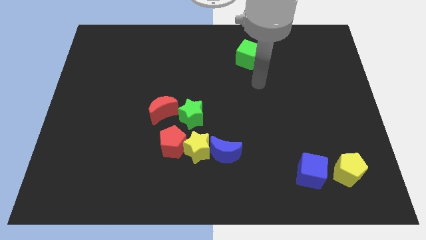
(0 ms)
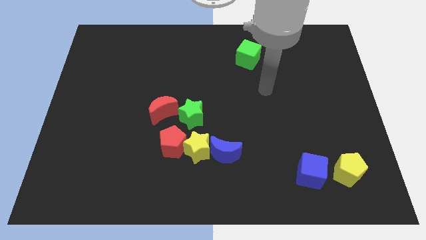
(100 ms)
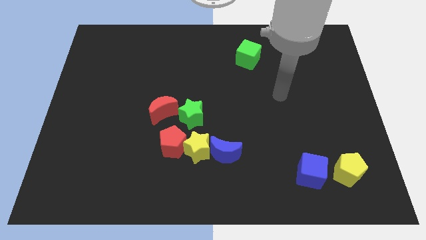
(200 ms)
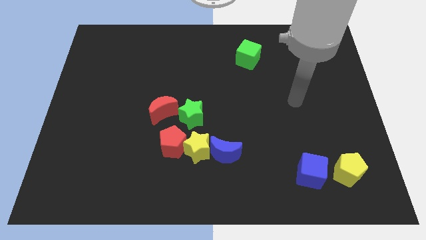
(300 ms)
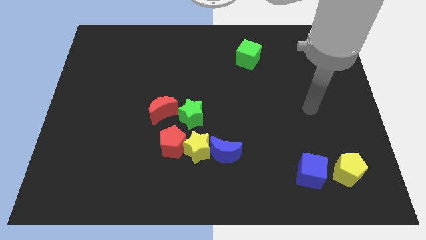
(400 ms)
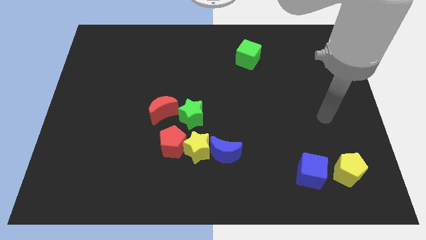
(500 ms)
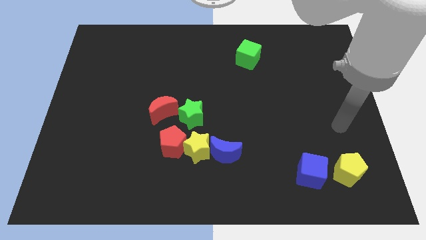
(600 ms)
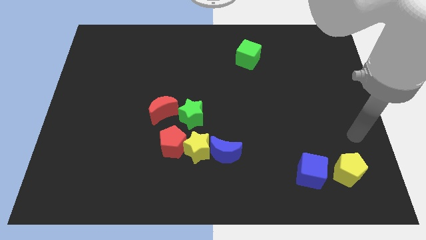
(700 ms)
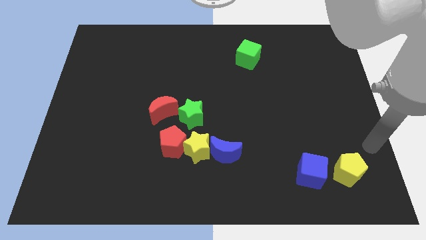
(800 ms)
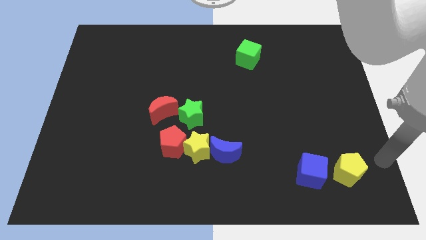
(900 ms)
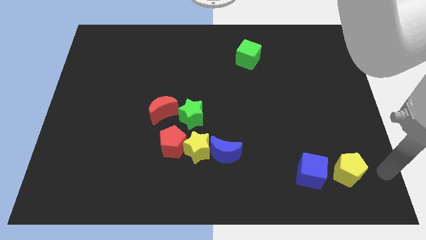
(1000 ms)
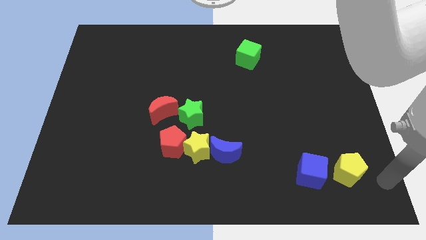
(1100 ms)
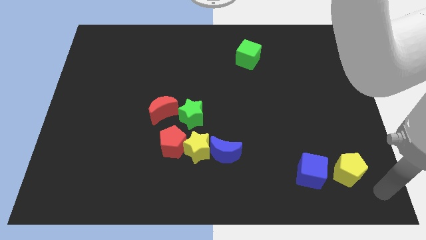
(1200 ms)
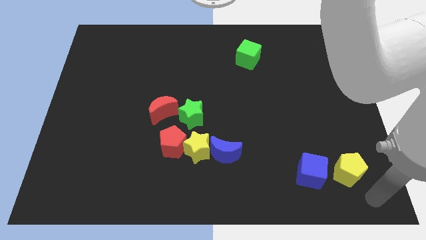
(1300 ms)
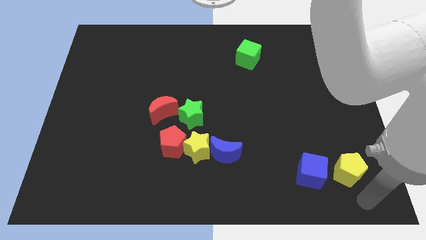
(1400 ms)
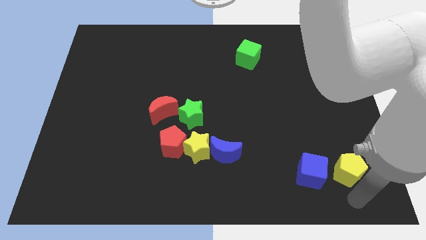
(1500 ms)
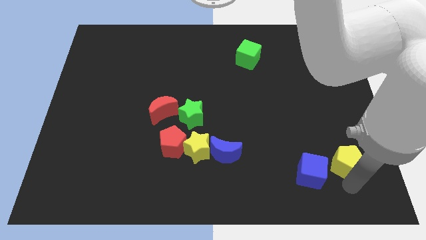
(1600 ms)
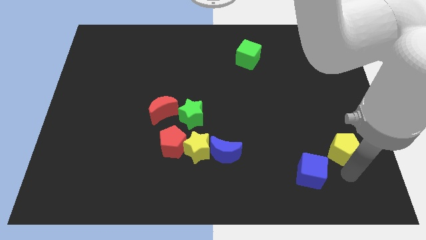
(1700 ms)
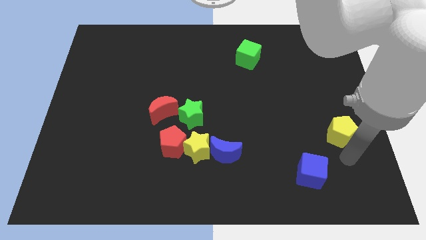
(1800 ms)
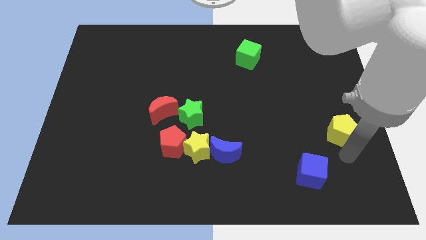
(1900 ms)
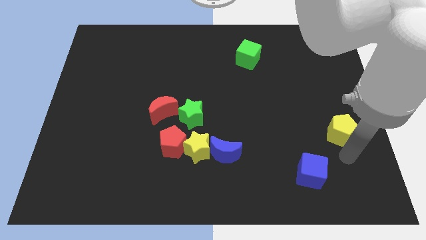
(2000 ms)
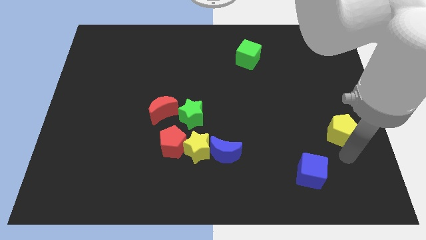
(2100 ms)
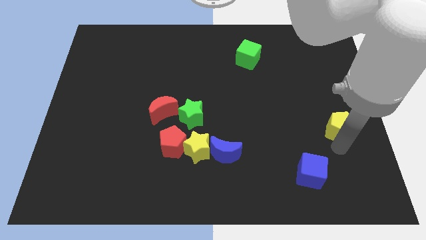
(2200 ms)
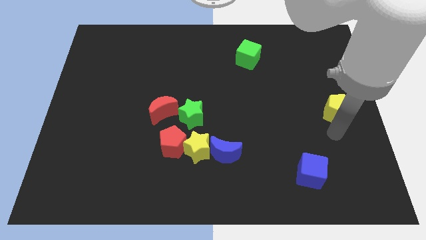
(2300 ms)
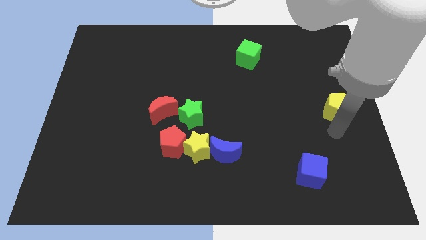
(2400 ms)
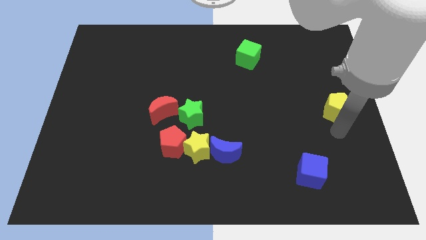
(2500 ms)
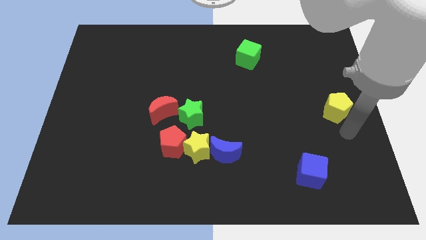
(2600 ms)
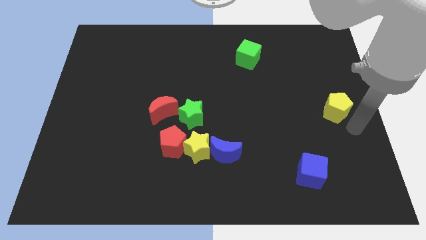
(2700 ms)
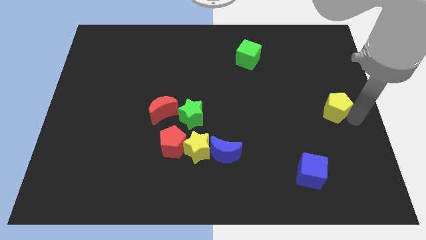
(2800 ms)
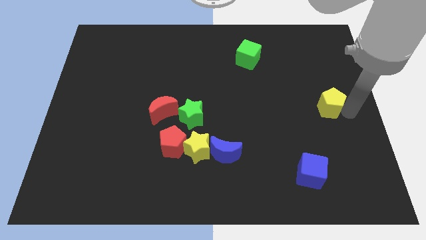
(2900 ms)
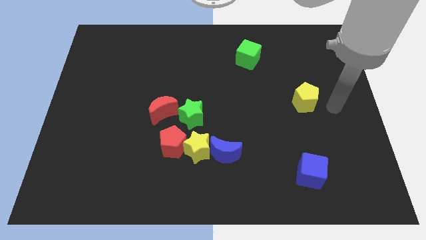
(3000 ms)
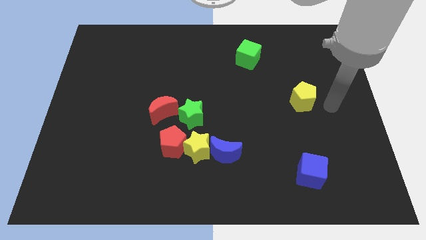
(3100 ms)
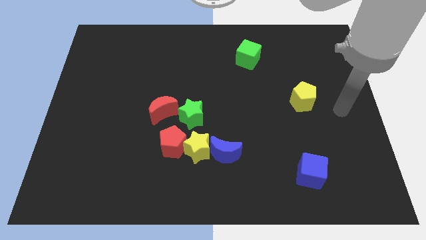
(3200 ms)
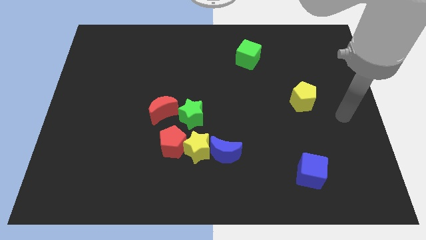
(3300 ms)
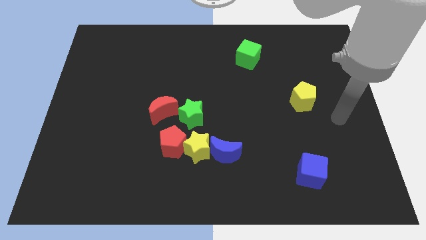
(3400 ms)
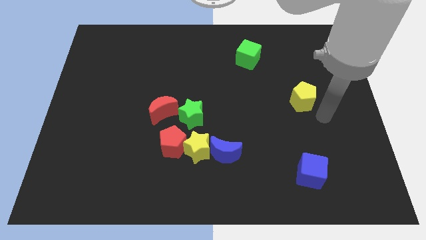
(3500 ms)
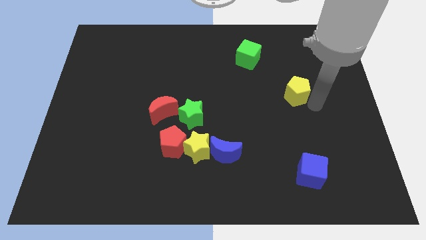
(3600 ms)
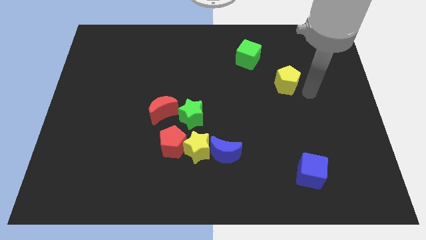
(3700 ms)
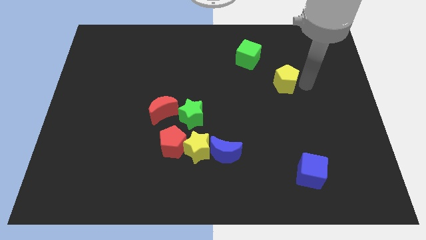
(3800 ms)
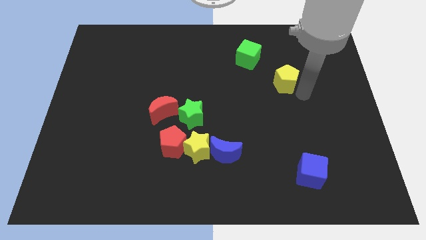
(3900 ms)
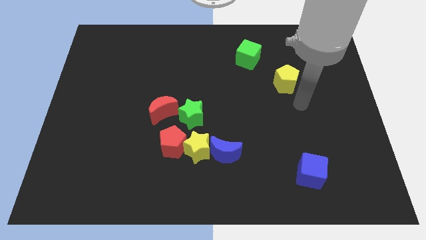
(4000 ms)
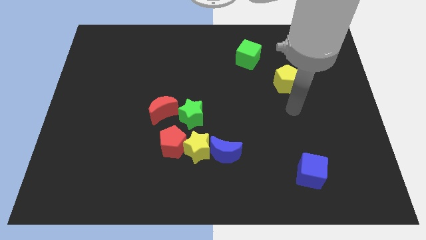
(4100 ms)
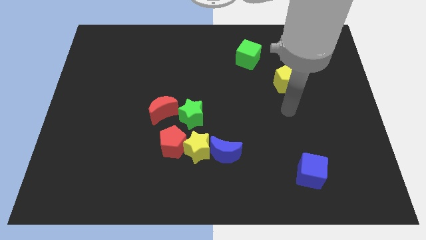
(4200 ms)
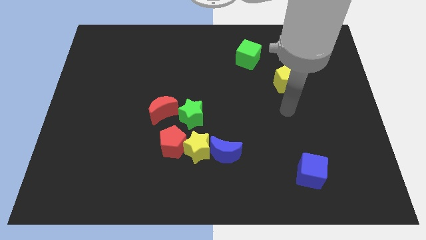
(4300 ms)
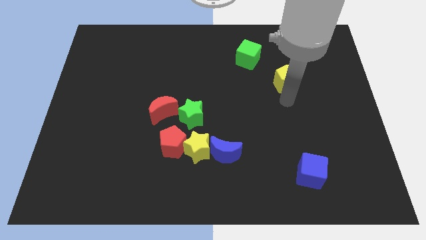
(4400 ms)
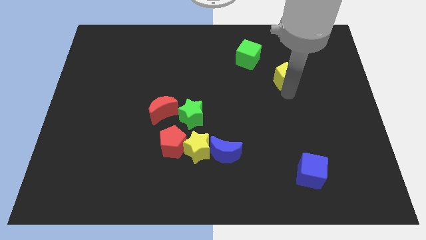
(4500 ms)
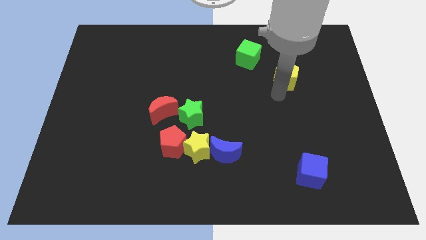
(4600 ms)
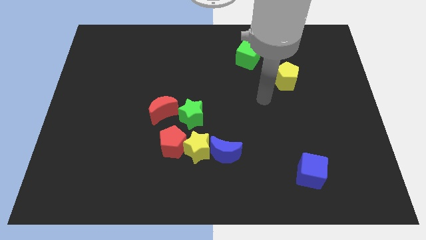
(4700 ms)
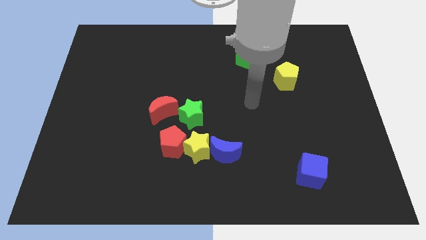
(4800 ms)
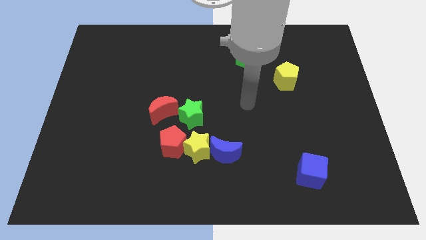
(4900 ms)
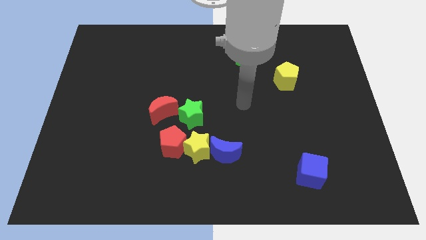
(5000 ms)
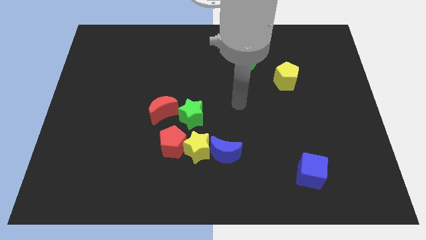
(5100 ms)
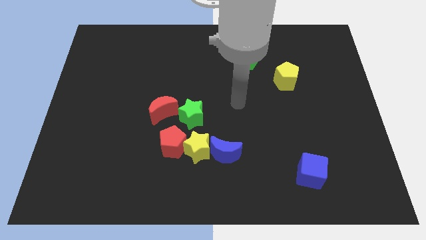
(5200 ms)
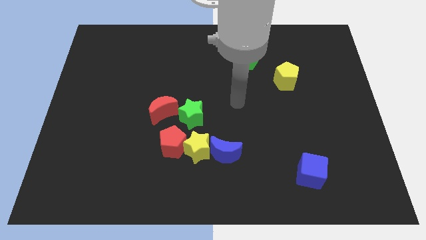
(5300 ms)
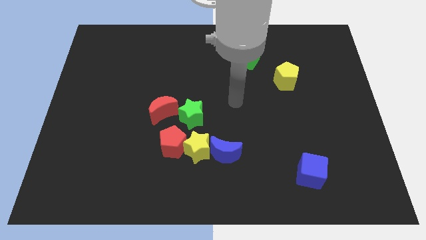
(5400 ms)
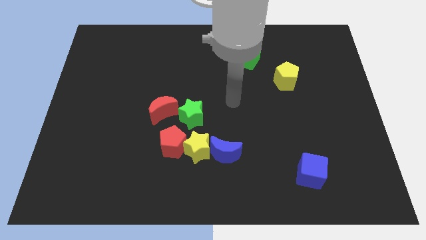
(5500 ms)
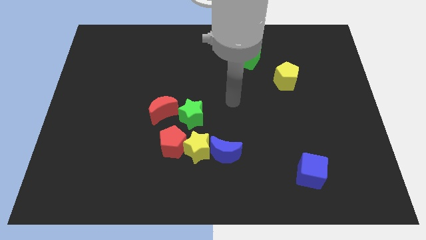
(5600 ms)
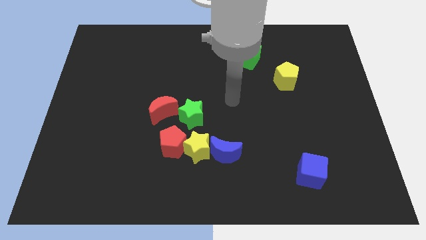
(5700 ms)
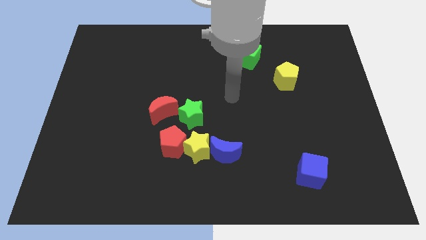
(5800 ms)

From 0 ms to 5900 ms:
place yellow pentagon to the bottom right of green cube

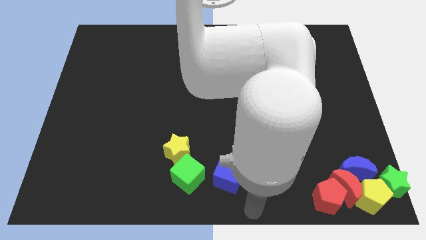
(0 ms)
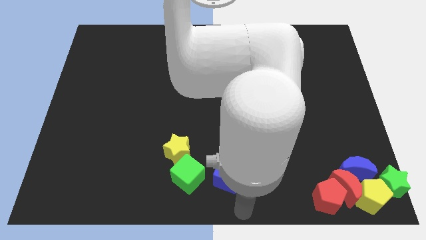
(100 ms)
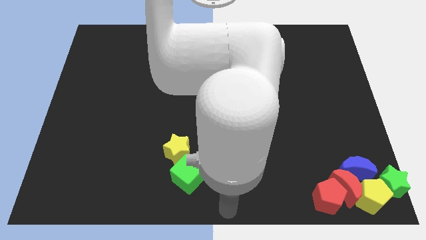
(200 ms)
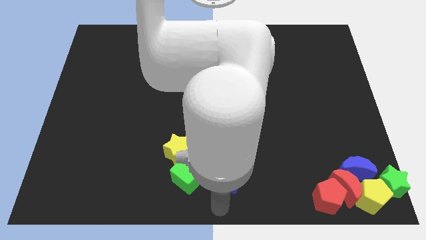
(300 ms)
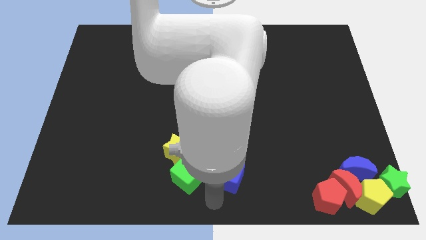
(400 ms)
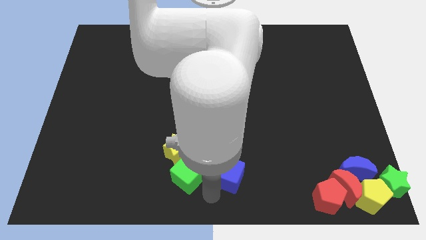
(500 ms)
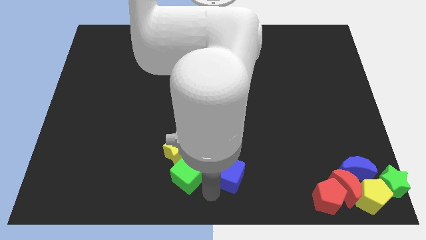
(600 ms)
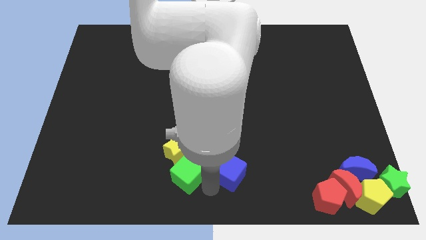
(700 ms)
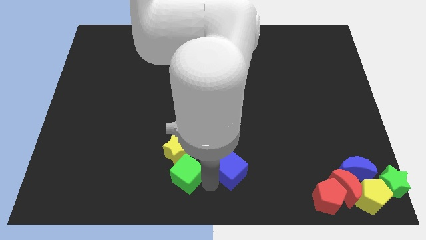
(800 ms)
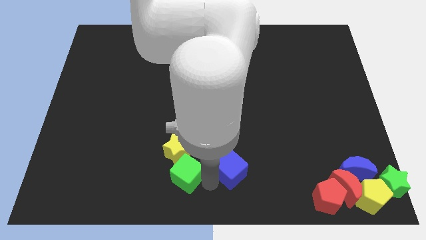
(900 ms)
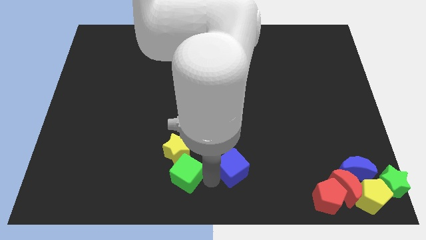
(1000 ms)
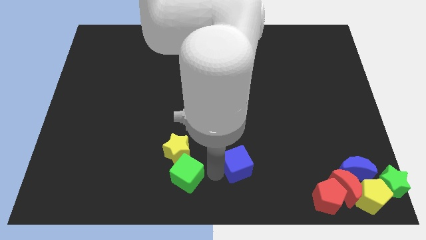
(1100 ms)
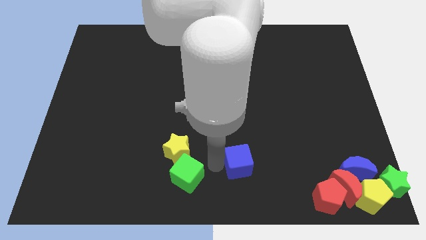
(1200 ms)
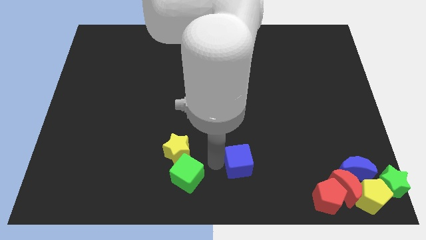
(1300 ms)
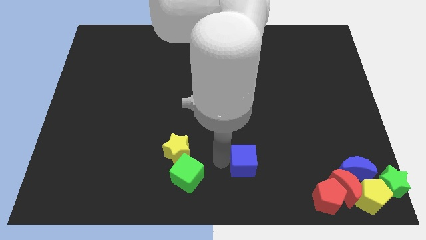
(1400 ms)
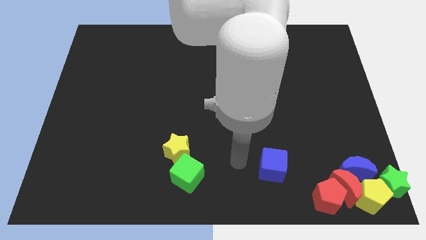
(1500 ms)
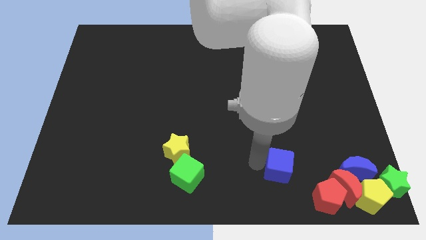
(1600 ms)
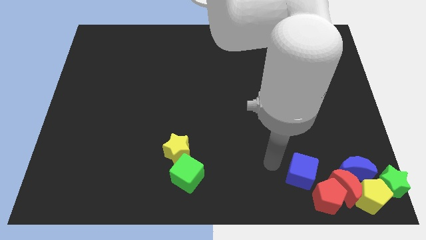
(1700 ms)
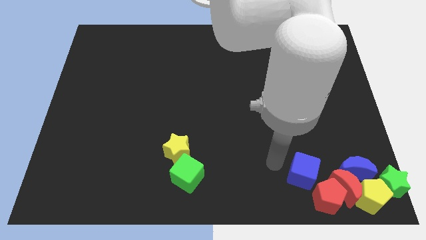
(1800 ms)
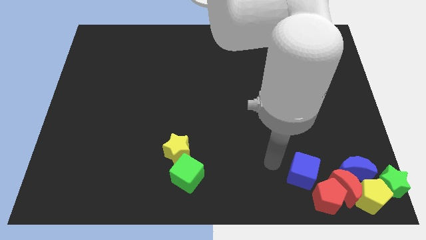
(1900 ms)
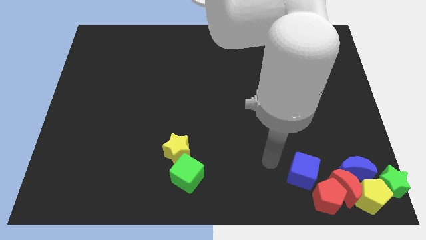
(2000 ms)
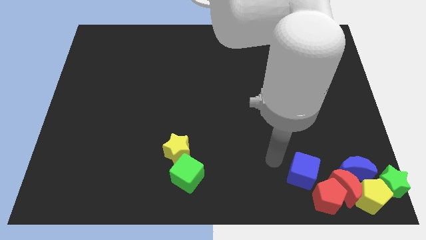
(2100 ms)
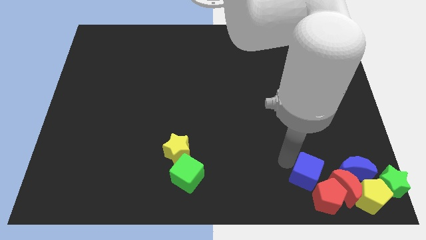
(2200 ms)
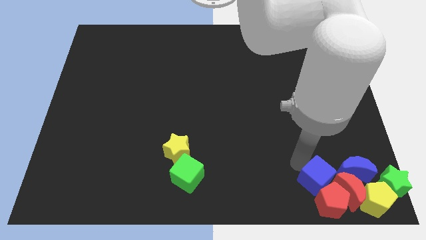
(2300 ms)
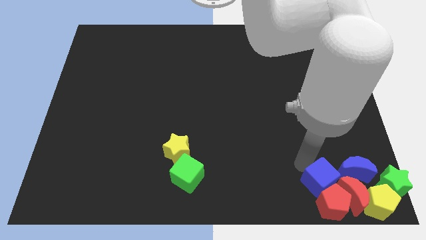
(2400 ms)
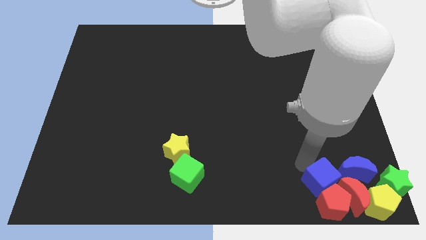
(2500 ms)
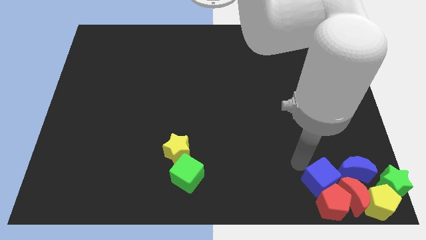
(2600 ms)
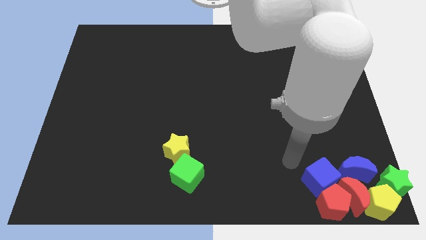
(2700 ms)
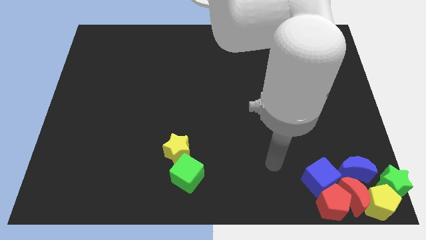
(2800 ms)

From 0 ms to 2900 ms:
push blue block into red pentagon and red crescent

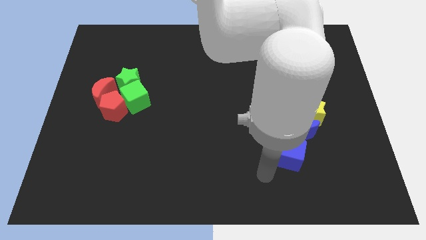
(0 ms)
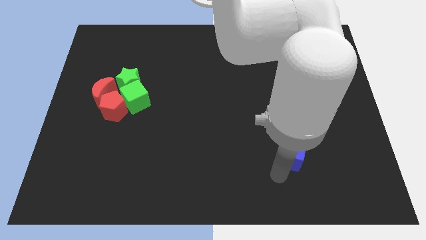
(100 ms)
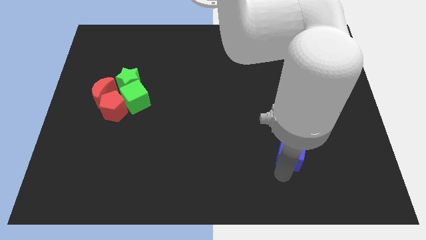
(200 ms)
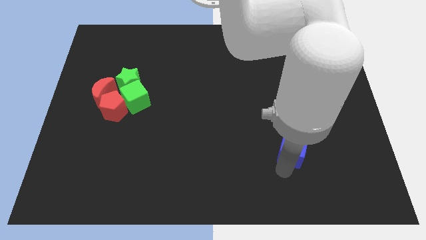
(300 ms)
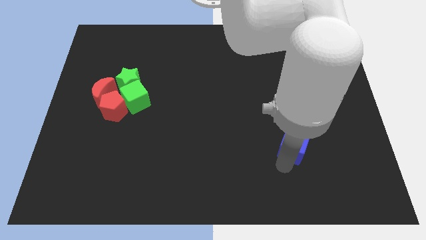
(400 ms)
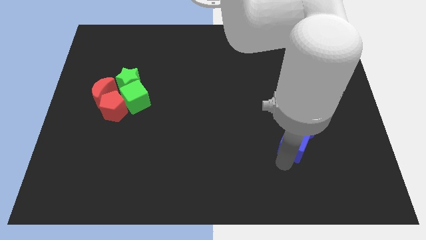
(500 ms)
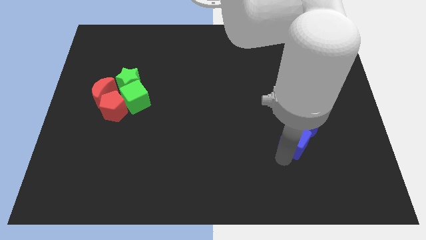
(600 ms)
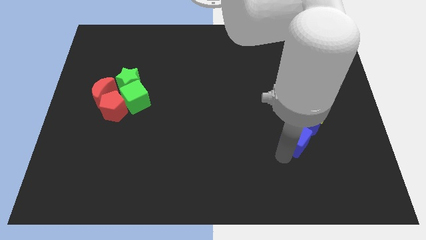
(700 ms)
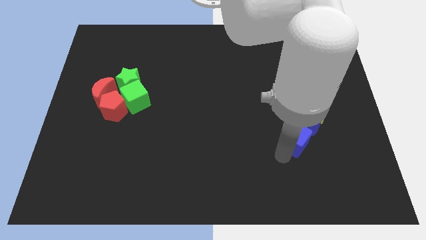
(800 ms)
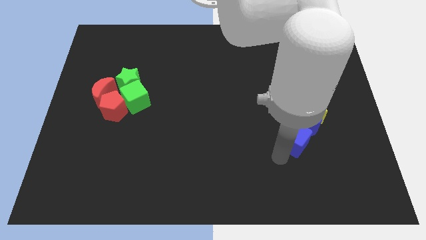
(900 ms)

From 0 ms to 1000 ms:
push the blue cube into the blue crescent
